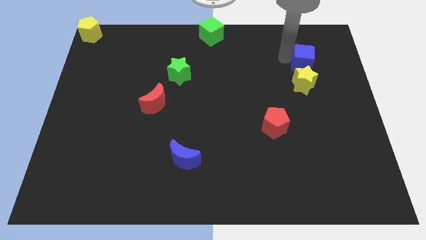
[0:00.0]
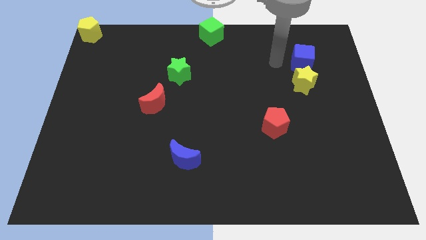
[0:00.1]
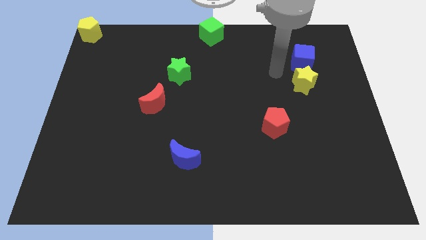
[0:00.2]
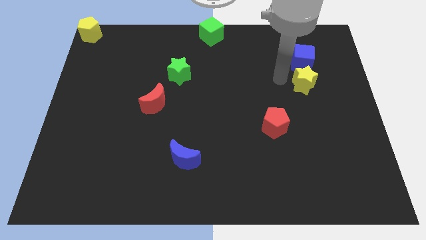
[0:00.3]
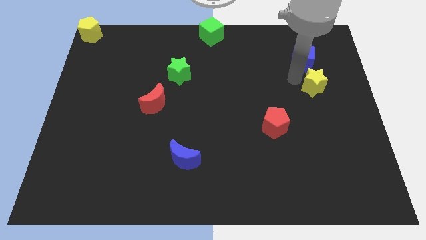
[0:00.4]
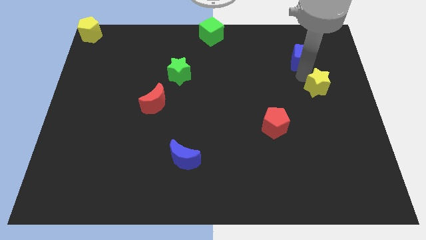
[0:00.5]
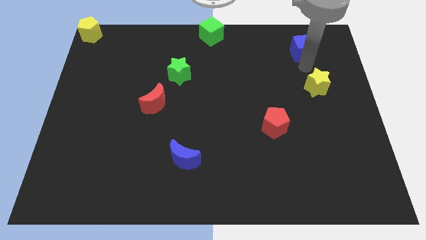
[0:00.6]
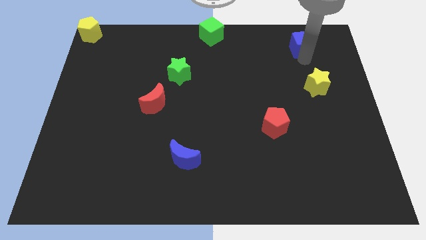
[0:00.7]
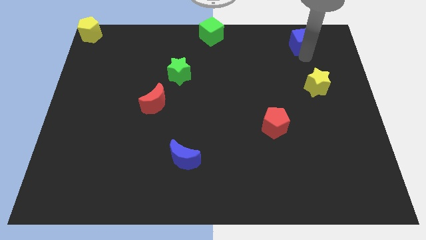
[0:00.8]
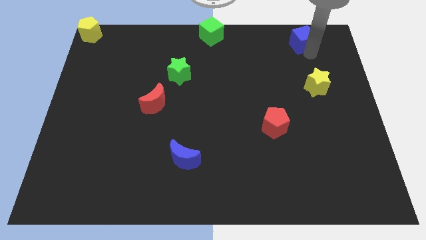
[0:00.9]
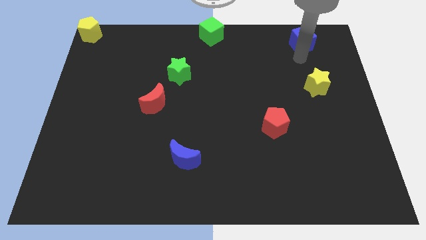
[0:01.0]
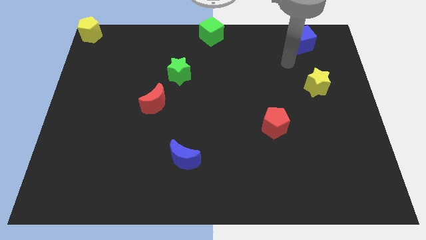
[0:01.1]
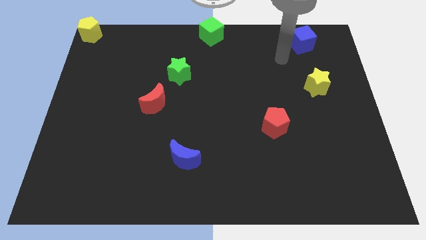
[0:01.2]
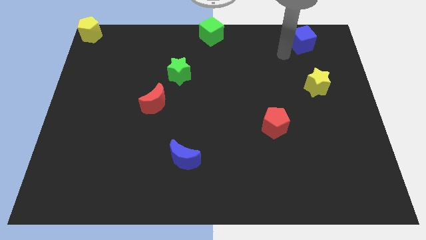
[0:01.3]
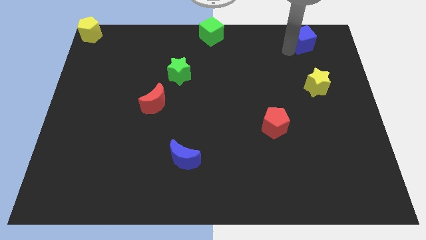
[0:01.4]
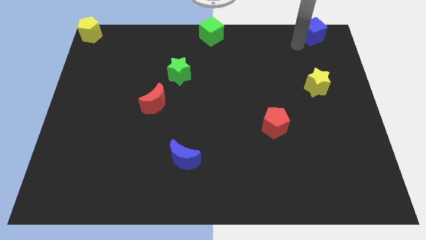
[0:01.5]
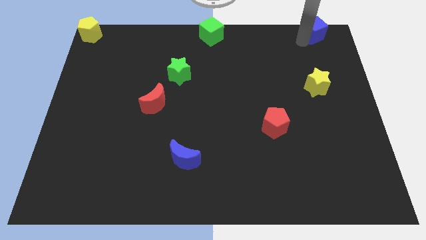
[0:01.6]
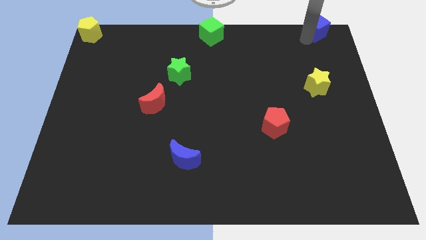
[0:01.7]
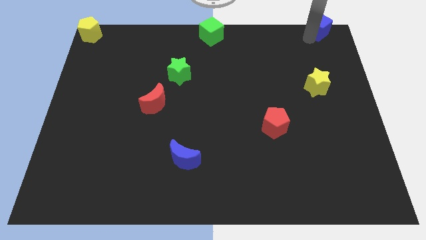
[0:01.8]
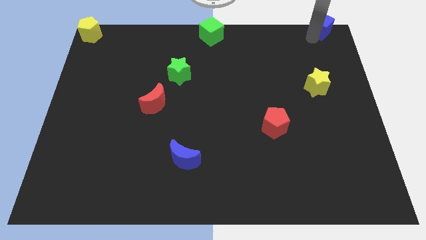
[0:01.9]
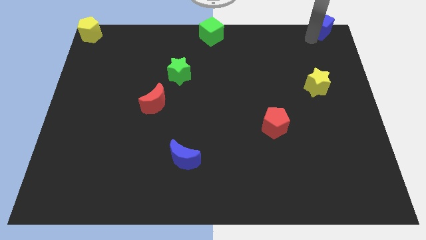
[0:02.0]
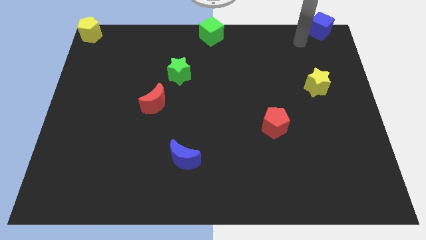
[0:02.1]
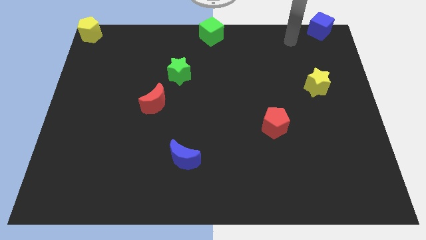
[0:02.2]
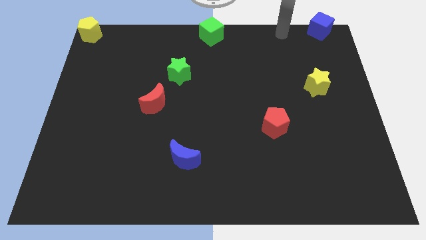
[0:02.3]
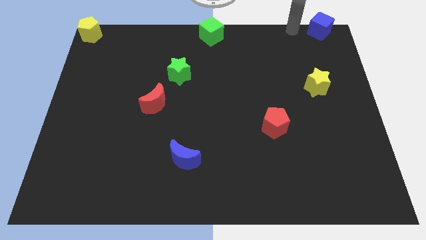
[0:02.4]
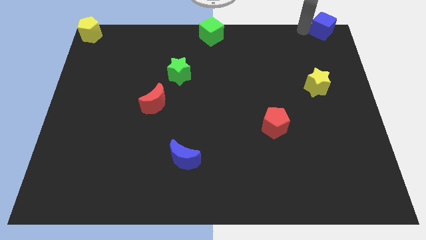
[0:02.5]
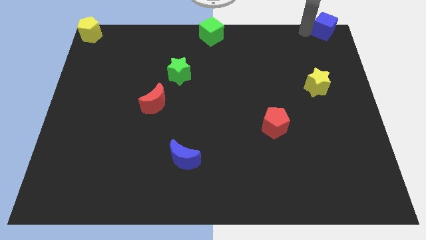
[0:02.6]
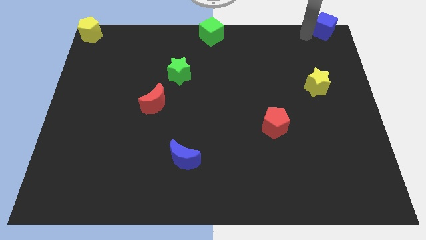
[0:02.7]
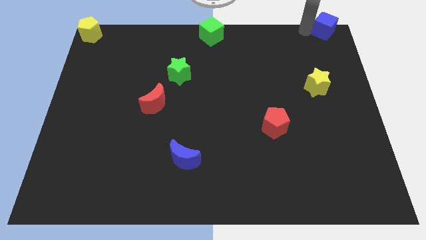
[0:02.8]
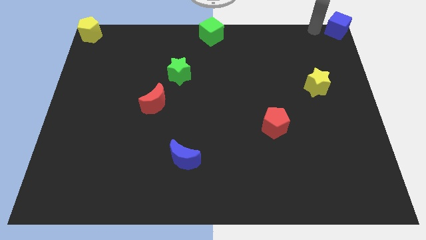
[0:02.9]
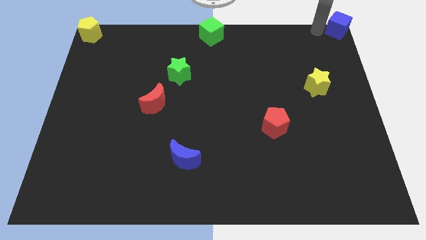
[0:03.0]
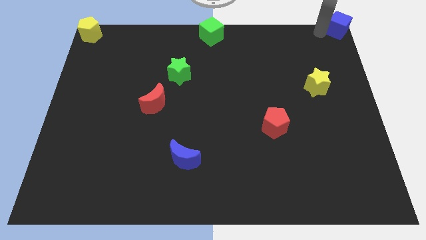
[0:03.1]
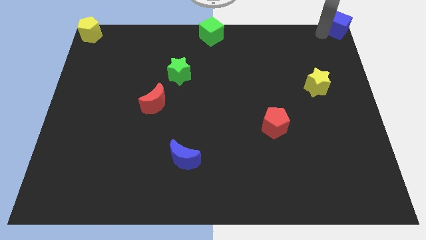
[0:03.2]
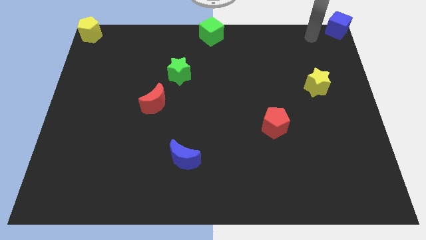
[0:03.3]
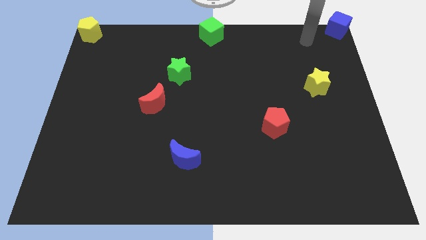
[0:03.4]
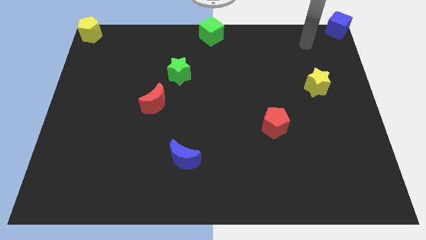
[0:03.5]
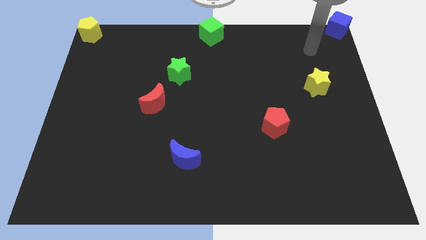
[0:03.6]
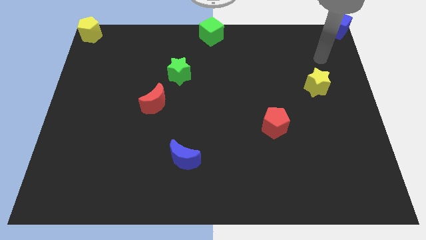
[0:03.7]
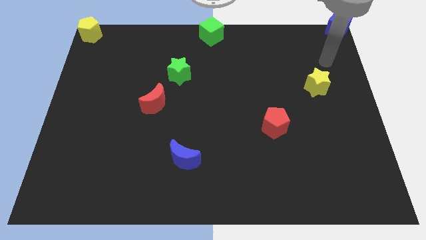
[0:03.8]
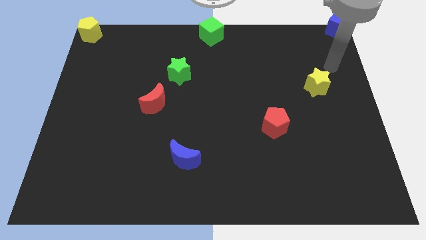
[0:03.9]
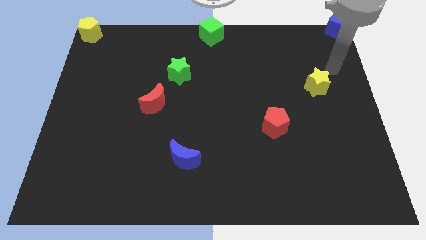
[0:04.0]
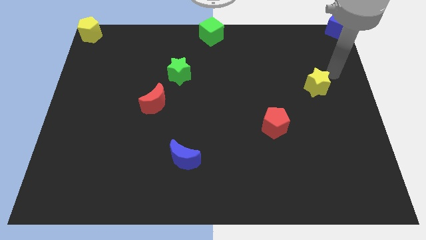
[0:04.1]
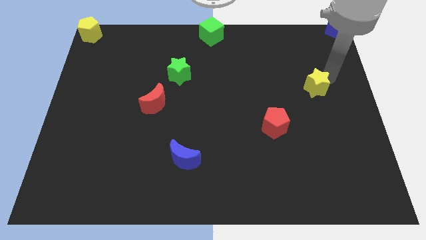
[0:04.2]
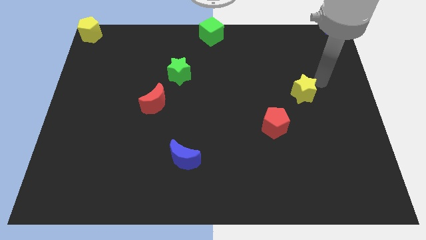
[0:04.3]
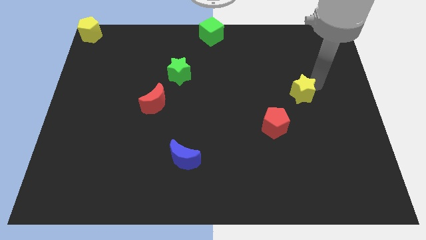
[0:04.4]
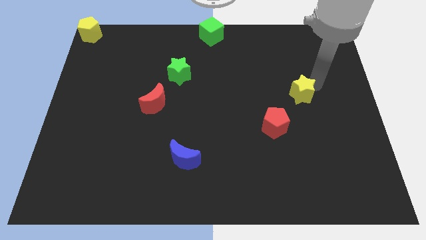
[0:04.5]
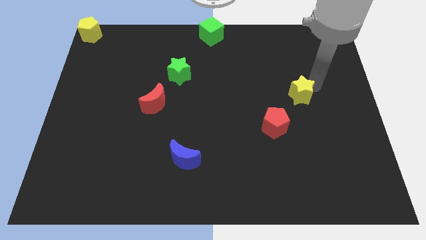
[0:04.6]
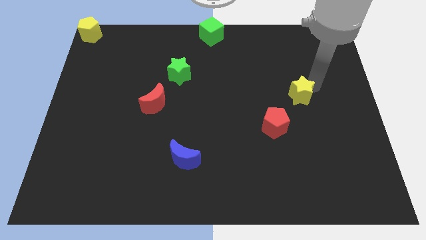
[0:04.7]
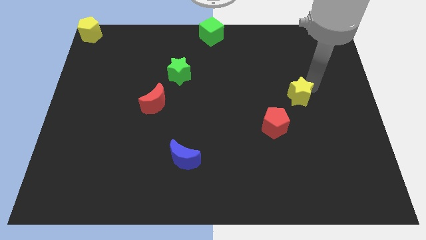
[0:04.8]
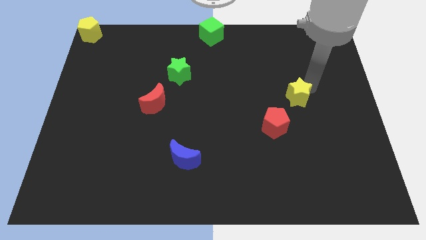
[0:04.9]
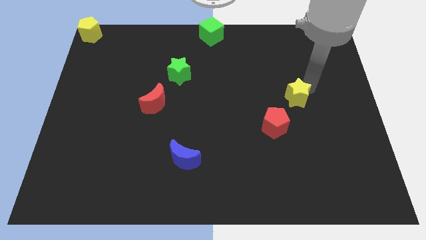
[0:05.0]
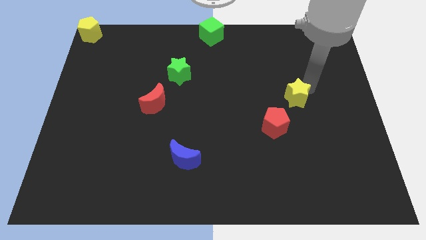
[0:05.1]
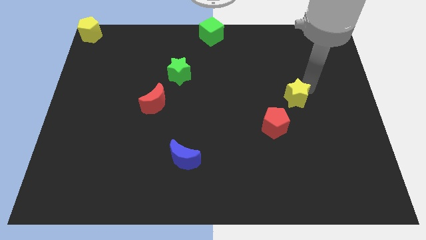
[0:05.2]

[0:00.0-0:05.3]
move the yellow satr close to the red pentagon

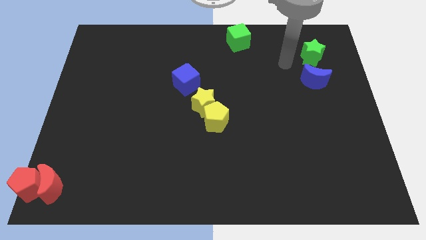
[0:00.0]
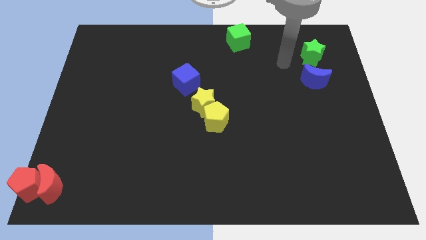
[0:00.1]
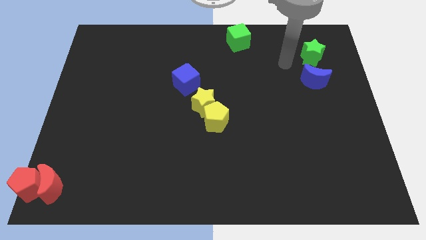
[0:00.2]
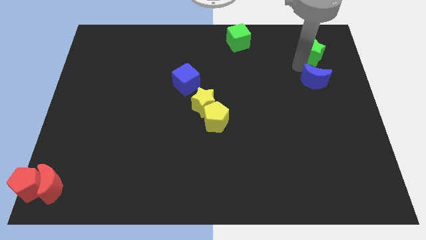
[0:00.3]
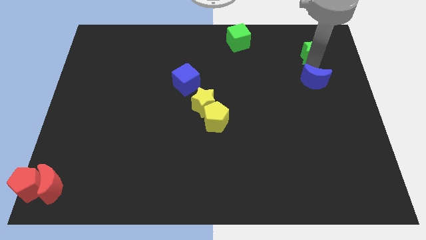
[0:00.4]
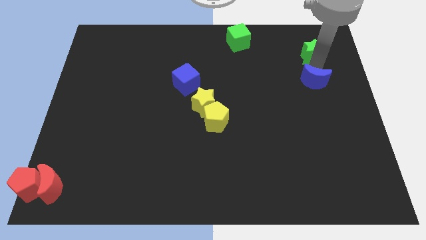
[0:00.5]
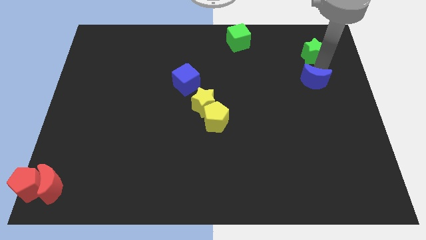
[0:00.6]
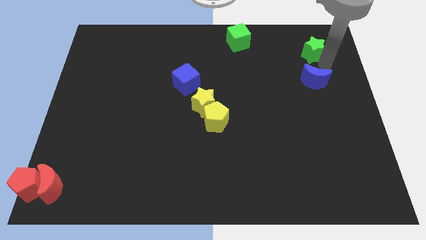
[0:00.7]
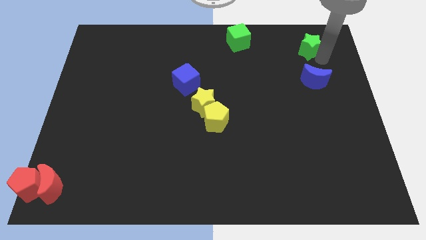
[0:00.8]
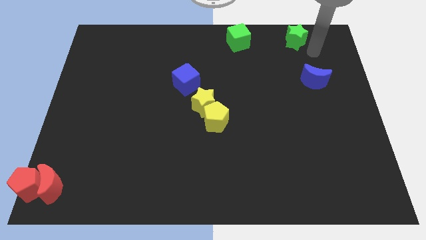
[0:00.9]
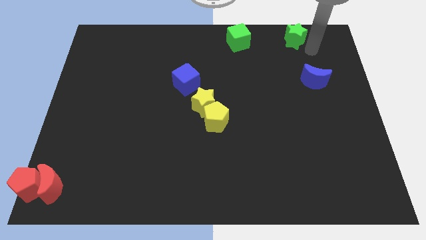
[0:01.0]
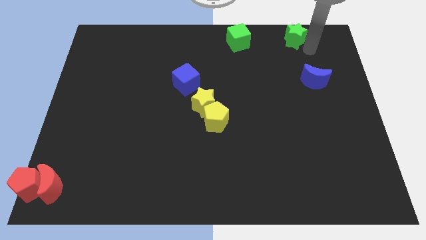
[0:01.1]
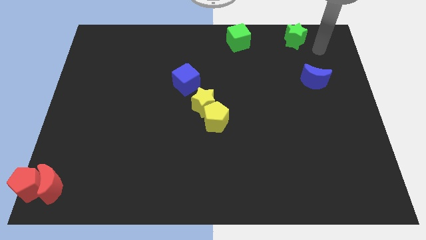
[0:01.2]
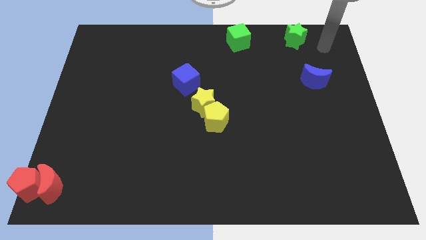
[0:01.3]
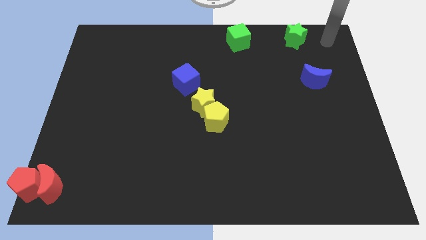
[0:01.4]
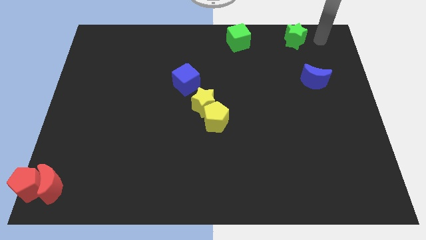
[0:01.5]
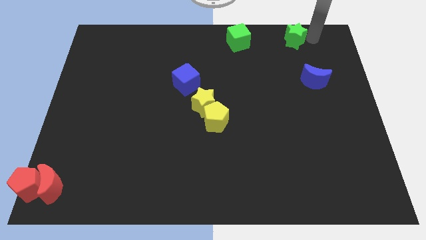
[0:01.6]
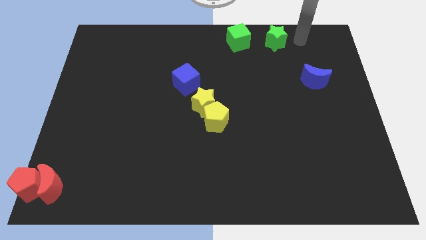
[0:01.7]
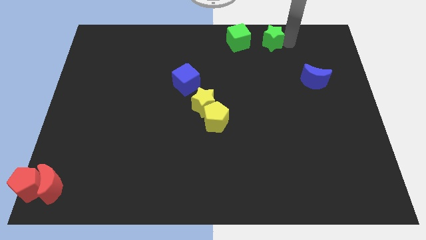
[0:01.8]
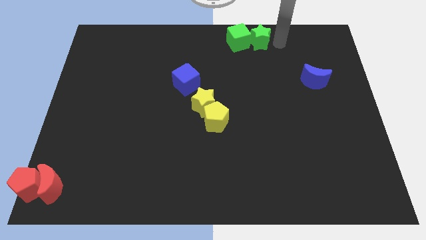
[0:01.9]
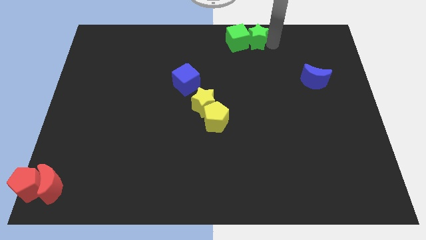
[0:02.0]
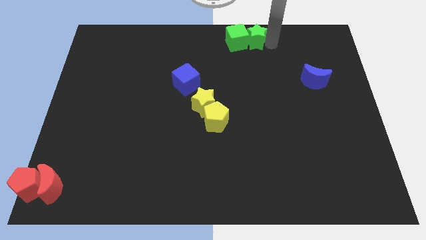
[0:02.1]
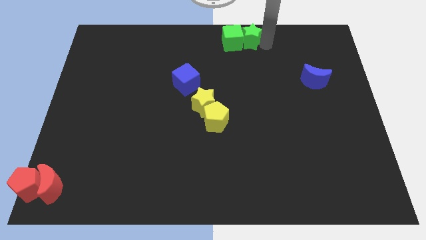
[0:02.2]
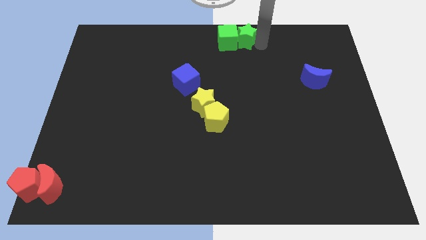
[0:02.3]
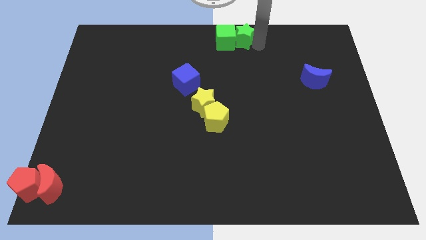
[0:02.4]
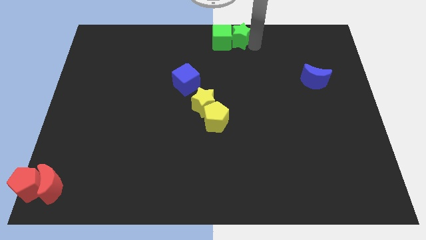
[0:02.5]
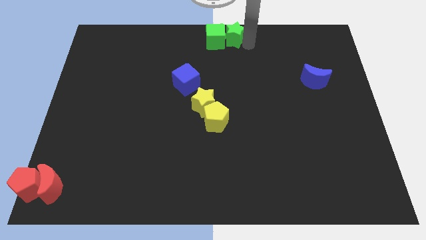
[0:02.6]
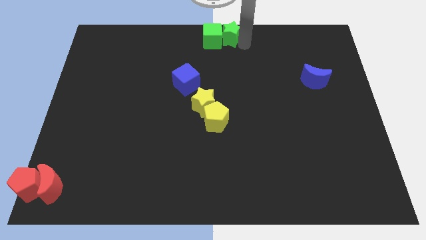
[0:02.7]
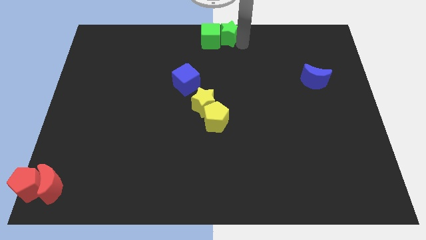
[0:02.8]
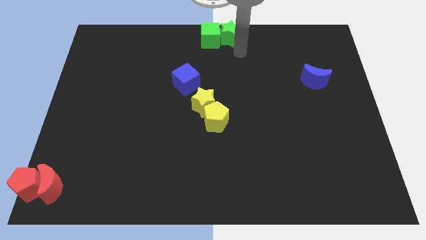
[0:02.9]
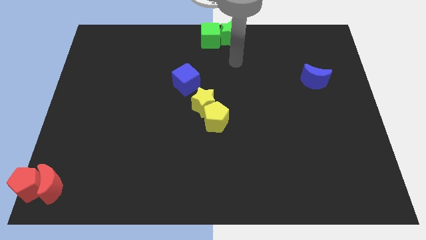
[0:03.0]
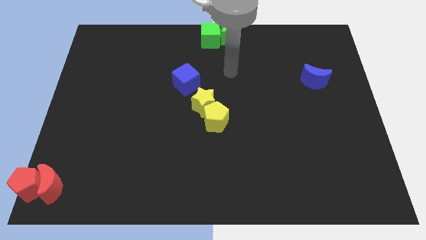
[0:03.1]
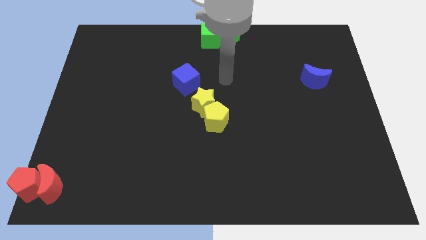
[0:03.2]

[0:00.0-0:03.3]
push the green star to the top center

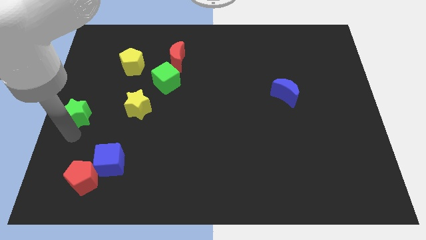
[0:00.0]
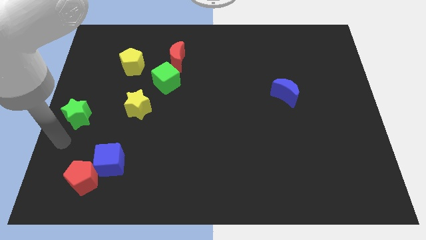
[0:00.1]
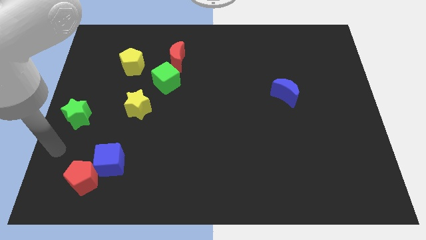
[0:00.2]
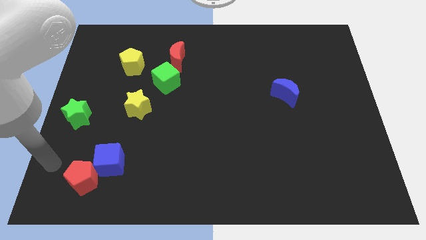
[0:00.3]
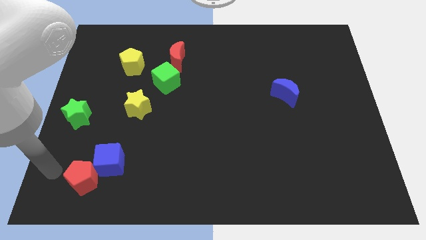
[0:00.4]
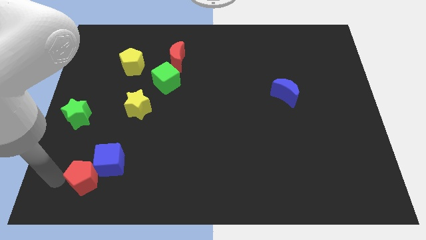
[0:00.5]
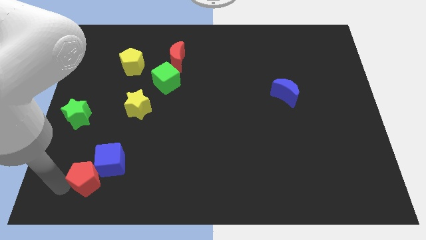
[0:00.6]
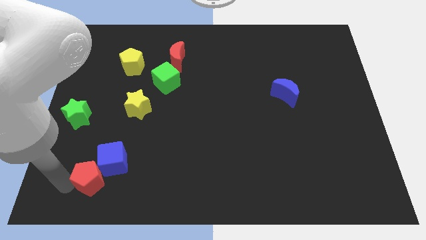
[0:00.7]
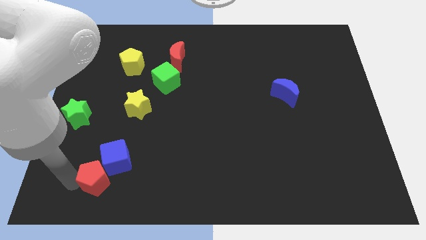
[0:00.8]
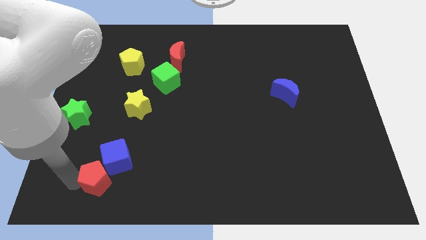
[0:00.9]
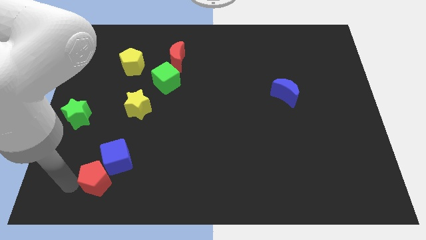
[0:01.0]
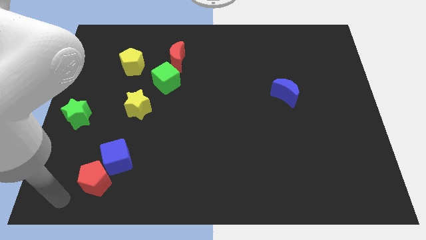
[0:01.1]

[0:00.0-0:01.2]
push the red pentagon into the blue cube
